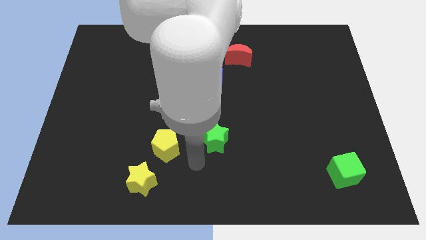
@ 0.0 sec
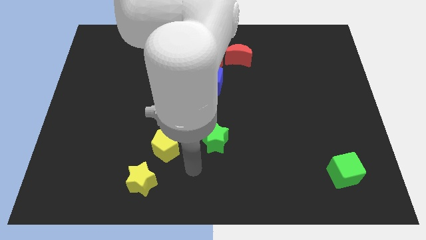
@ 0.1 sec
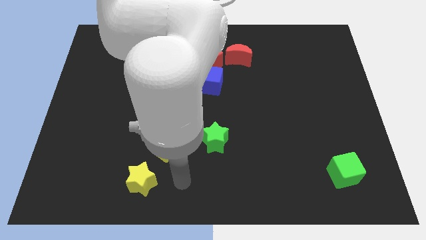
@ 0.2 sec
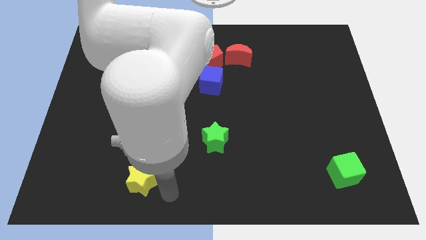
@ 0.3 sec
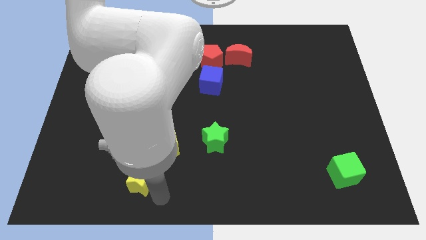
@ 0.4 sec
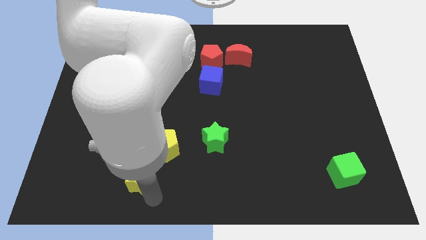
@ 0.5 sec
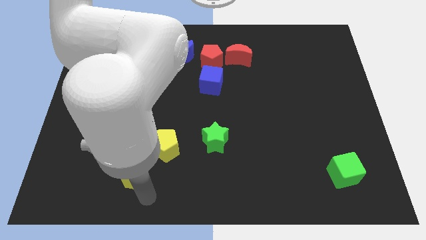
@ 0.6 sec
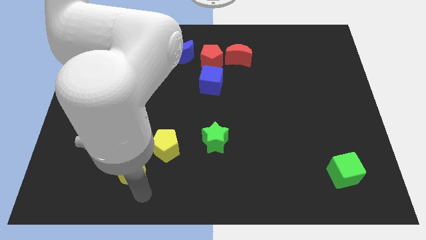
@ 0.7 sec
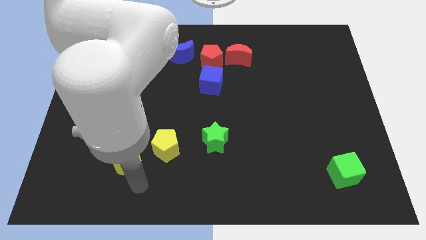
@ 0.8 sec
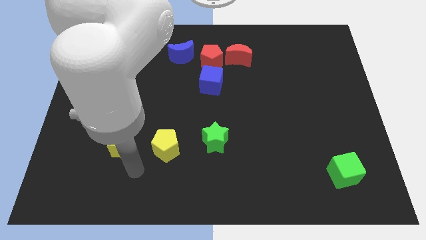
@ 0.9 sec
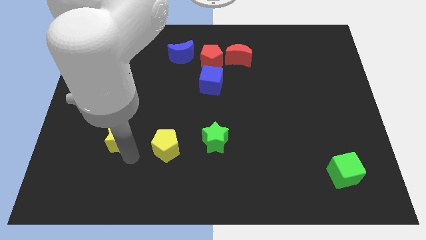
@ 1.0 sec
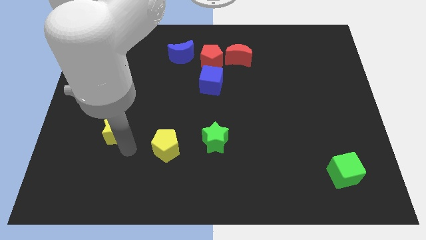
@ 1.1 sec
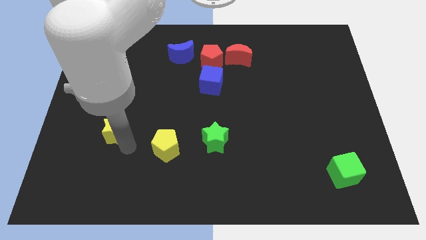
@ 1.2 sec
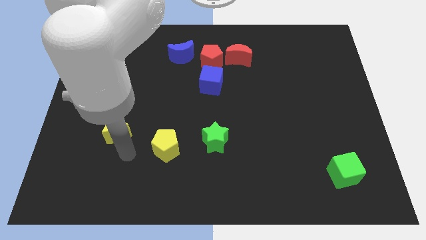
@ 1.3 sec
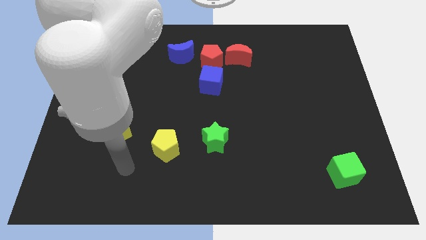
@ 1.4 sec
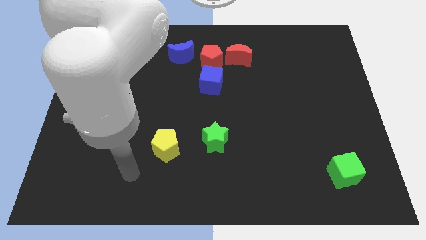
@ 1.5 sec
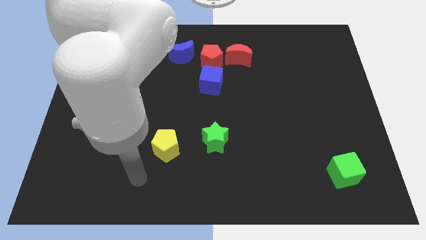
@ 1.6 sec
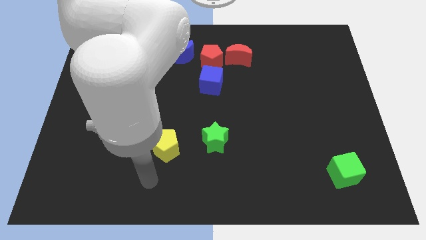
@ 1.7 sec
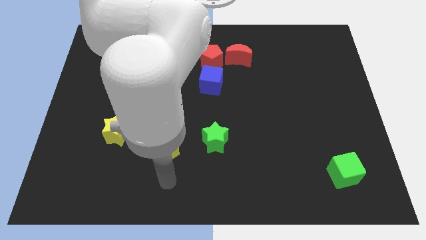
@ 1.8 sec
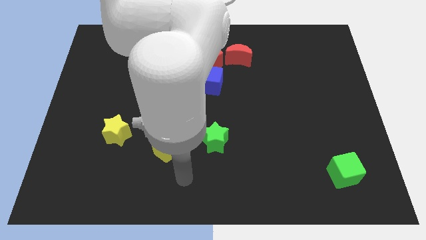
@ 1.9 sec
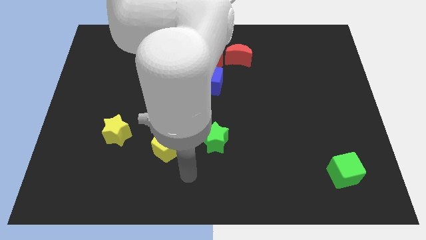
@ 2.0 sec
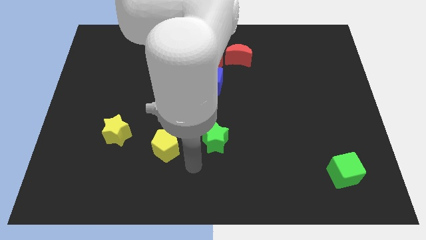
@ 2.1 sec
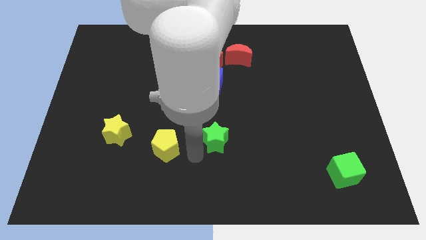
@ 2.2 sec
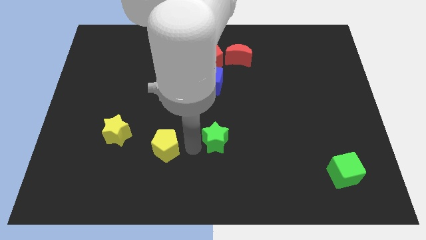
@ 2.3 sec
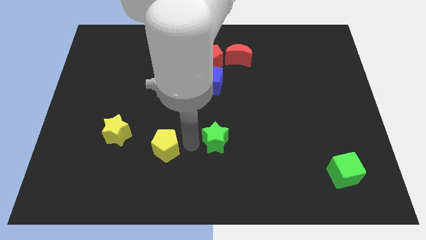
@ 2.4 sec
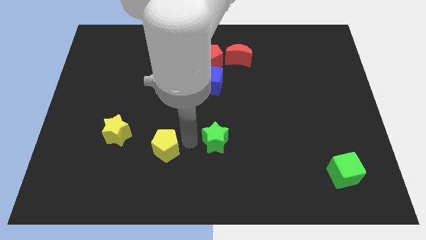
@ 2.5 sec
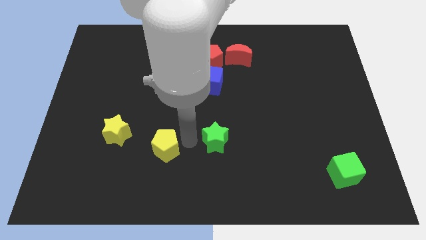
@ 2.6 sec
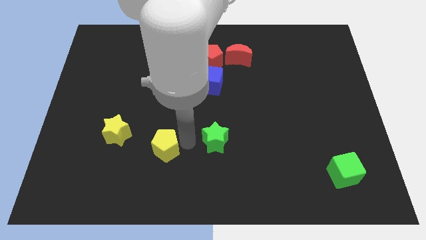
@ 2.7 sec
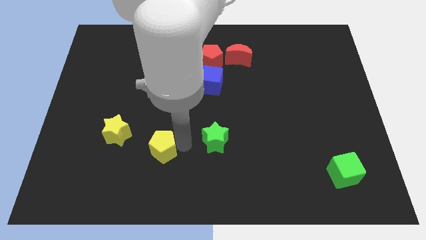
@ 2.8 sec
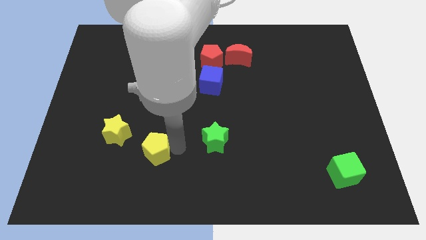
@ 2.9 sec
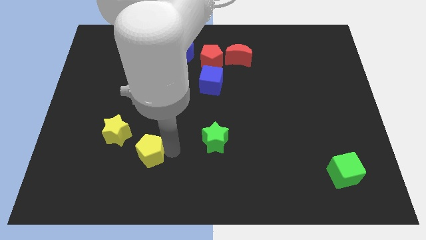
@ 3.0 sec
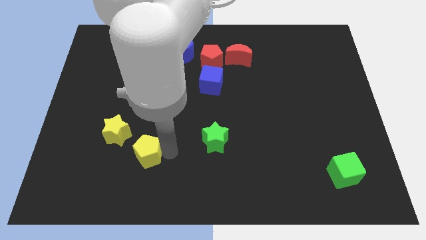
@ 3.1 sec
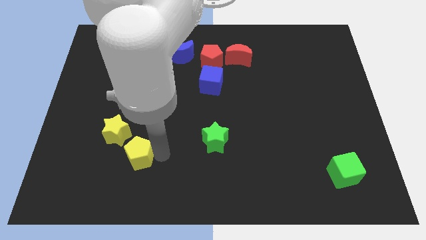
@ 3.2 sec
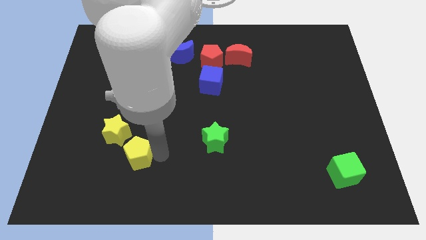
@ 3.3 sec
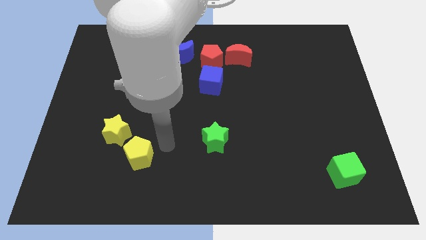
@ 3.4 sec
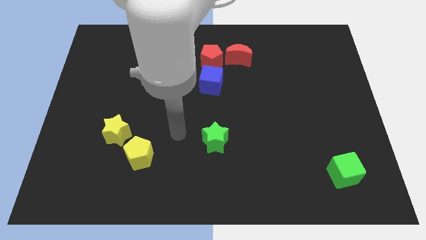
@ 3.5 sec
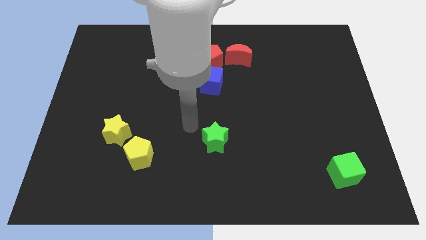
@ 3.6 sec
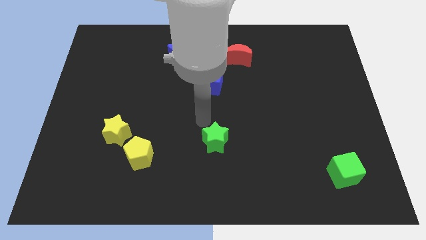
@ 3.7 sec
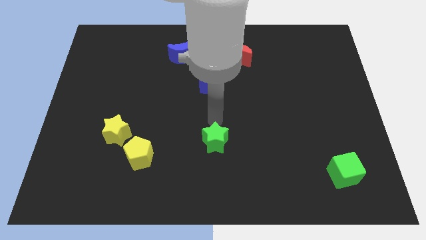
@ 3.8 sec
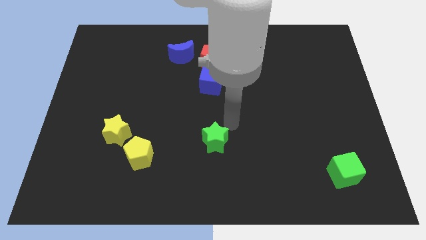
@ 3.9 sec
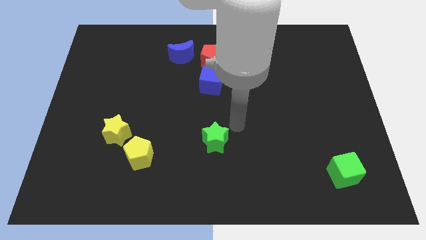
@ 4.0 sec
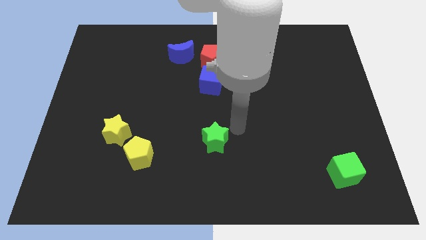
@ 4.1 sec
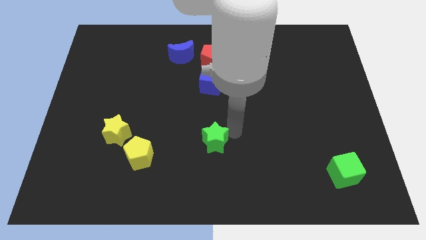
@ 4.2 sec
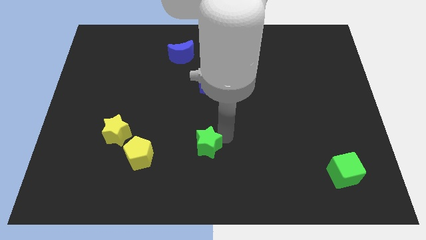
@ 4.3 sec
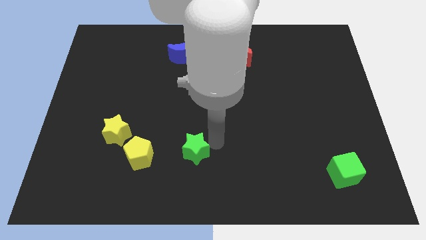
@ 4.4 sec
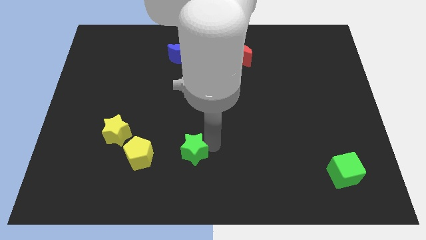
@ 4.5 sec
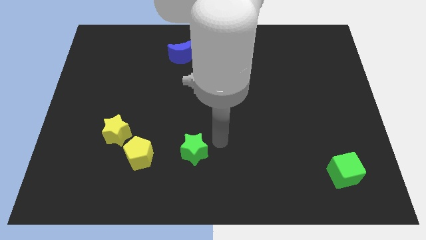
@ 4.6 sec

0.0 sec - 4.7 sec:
move the green star right to the yellow pentagon

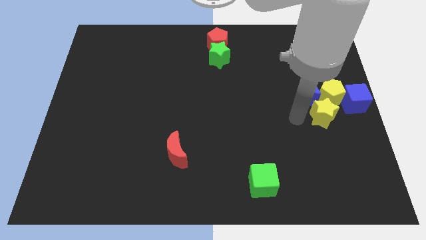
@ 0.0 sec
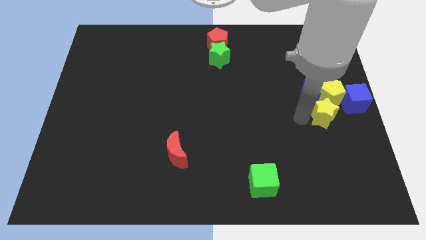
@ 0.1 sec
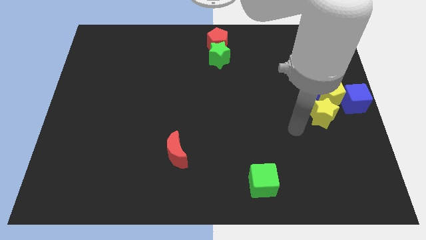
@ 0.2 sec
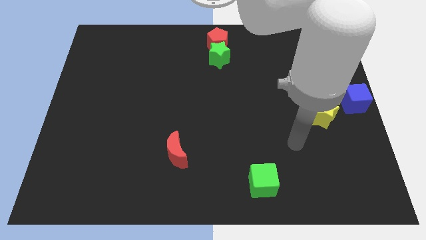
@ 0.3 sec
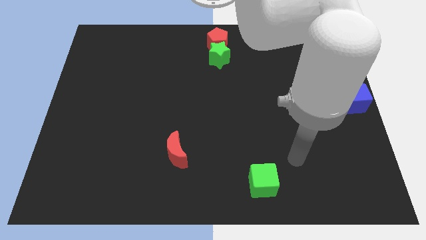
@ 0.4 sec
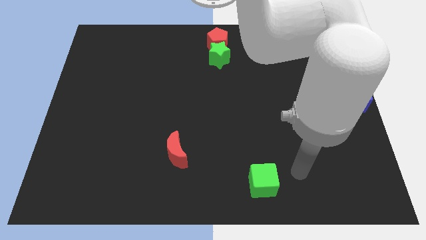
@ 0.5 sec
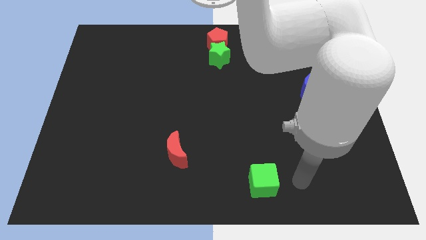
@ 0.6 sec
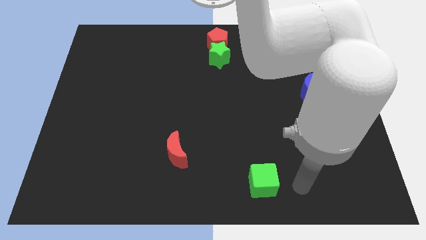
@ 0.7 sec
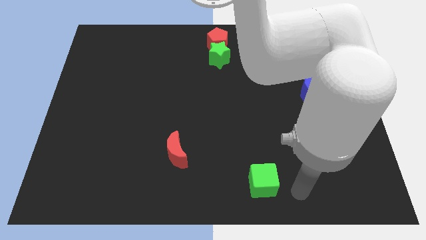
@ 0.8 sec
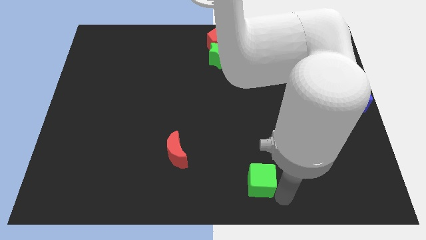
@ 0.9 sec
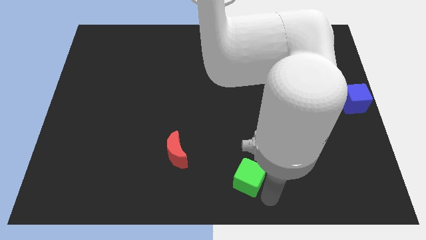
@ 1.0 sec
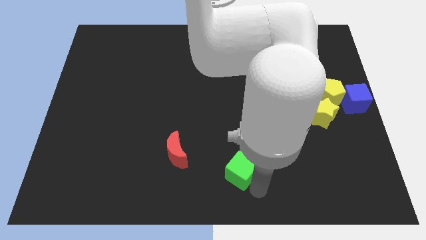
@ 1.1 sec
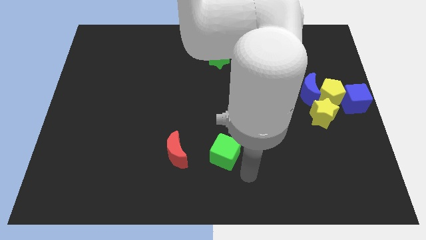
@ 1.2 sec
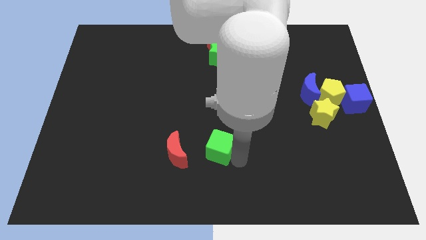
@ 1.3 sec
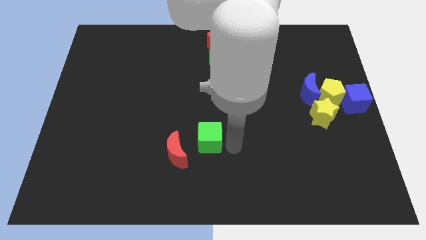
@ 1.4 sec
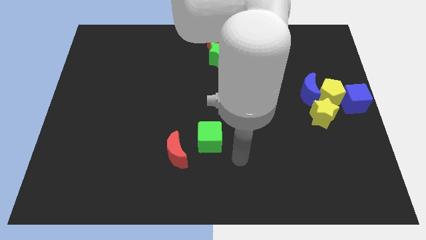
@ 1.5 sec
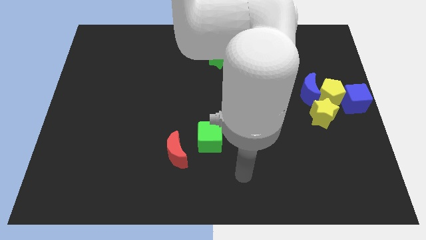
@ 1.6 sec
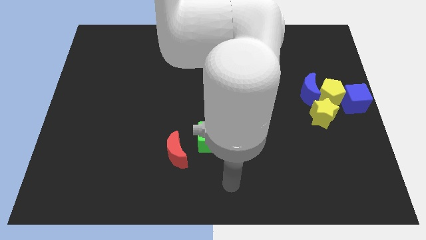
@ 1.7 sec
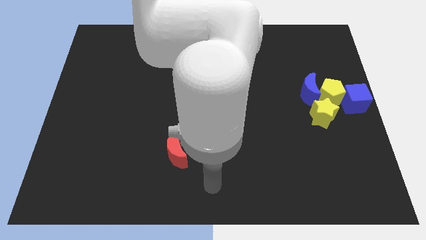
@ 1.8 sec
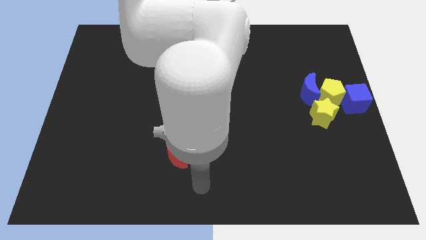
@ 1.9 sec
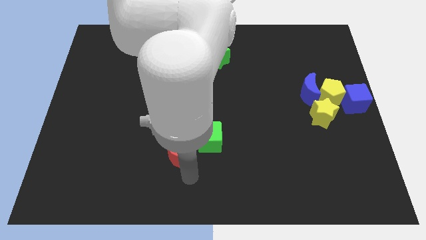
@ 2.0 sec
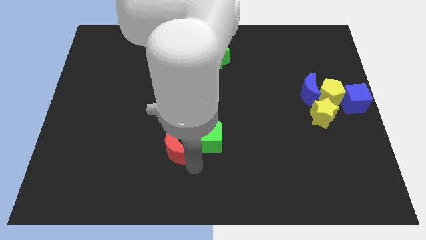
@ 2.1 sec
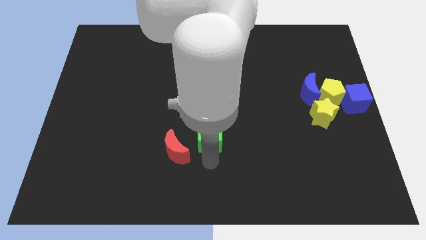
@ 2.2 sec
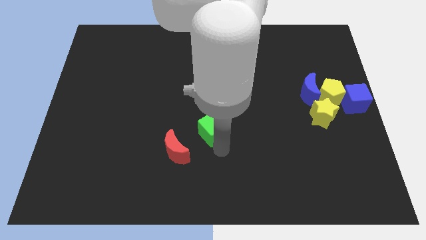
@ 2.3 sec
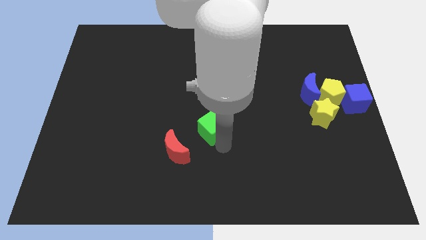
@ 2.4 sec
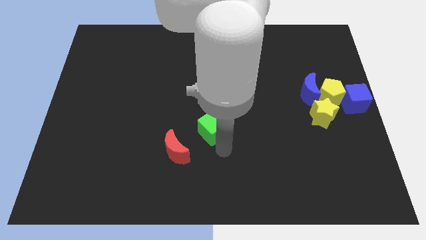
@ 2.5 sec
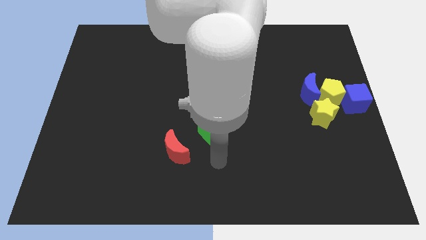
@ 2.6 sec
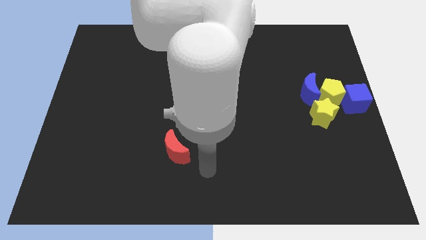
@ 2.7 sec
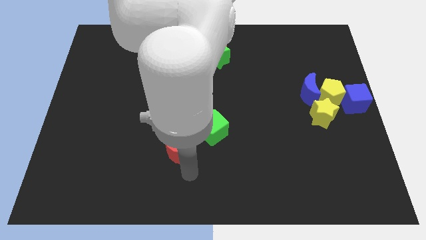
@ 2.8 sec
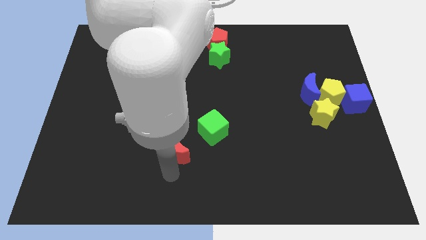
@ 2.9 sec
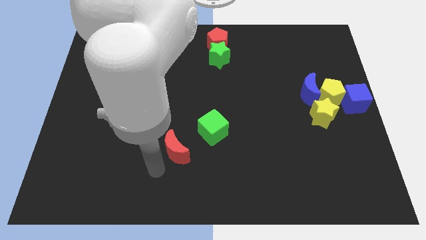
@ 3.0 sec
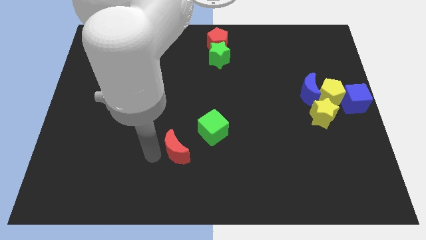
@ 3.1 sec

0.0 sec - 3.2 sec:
move green cube close to the red moon

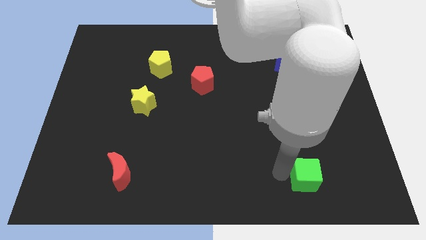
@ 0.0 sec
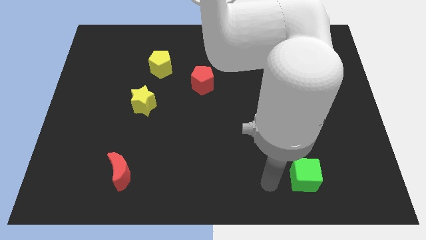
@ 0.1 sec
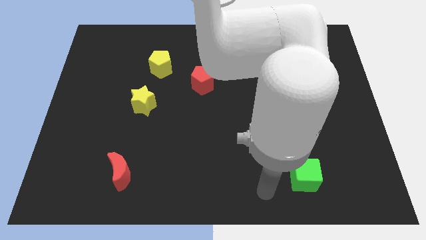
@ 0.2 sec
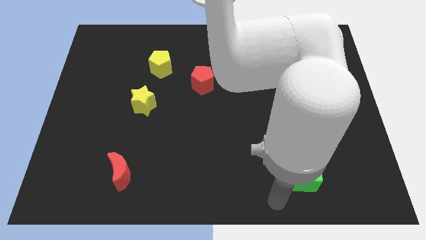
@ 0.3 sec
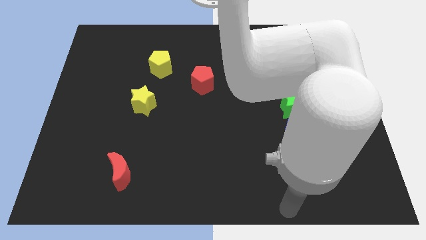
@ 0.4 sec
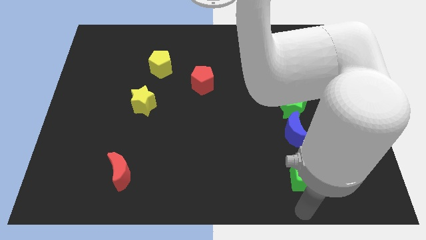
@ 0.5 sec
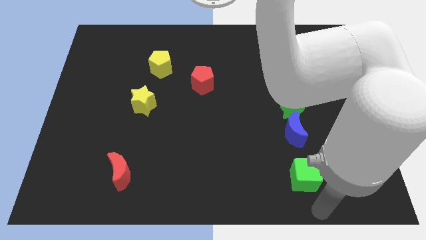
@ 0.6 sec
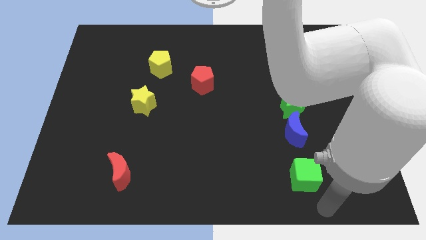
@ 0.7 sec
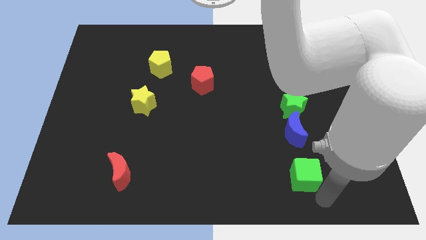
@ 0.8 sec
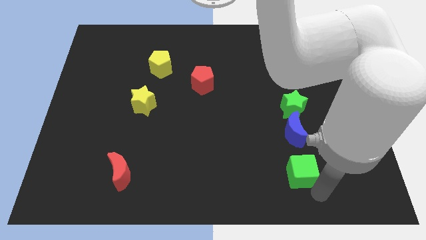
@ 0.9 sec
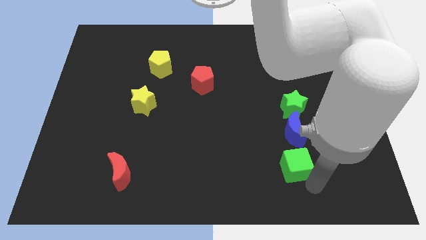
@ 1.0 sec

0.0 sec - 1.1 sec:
move green cube slightly up
